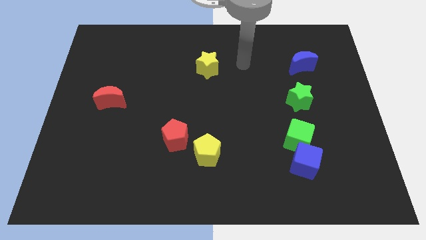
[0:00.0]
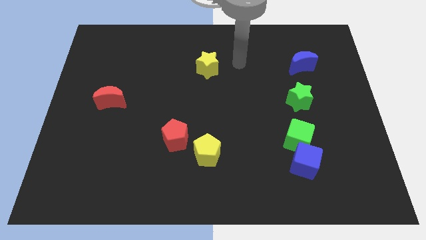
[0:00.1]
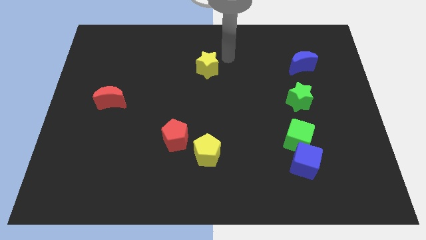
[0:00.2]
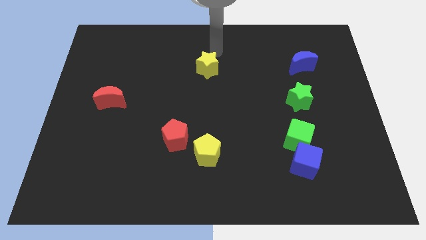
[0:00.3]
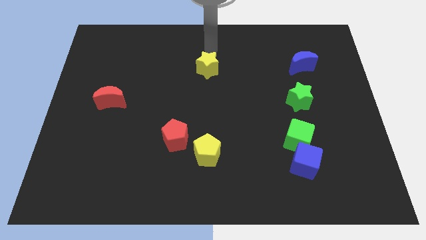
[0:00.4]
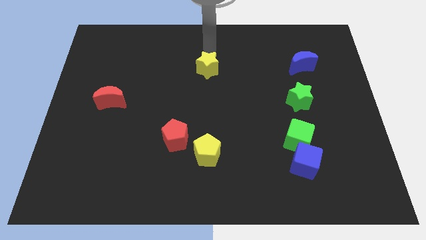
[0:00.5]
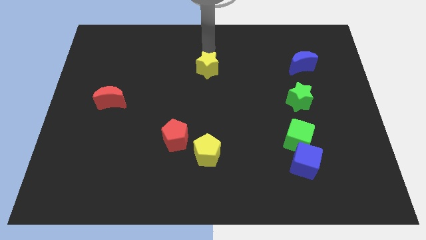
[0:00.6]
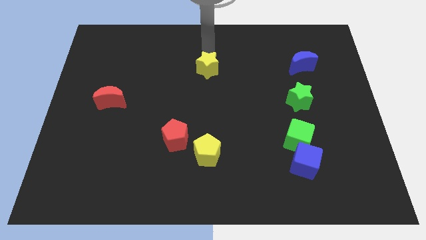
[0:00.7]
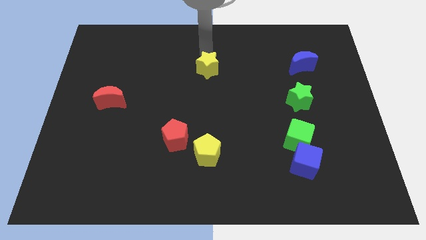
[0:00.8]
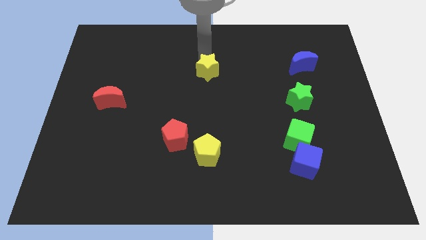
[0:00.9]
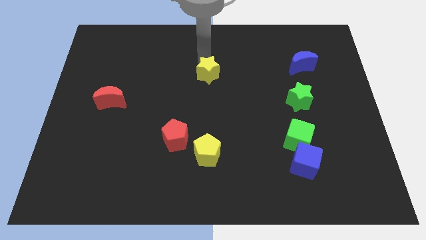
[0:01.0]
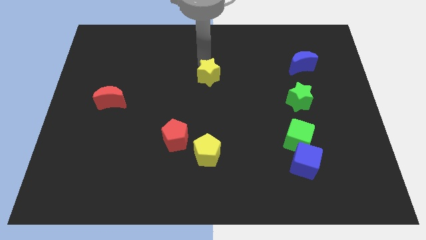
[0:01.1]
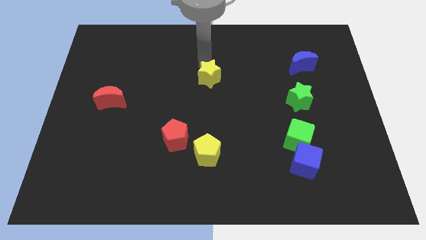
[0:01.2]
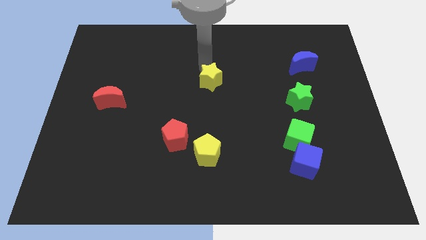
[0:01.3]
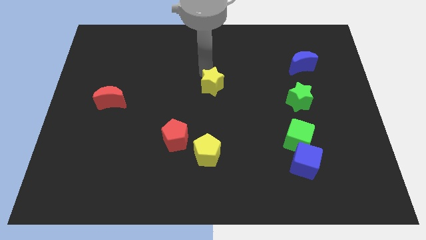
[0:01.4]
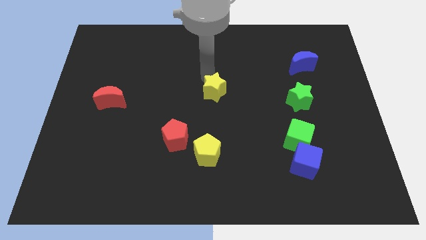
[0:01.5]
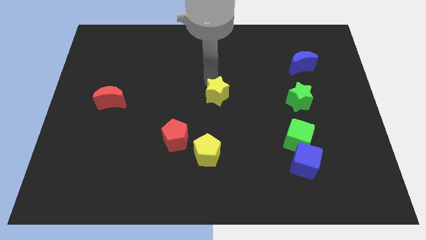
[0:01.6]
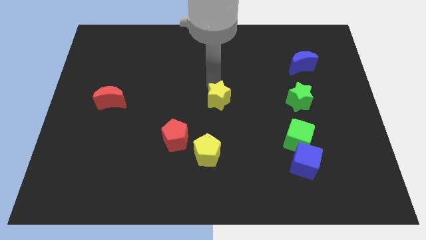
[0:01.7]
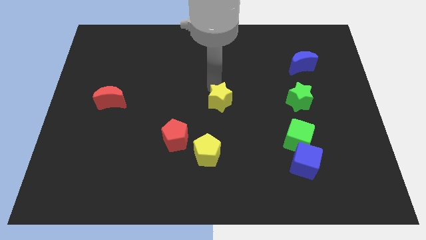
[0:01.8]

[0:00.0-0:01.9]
move the yellow star towards the yellow pentagon

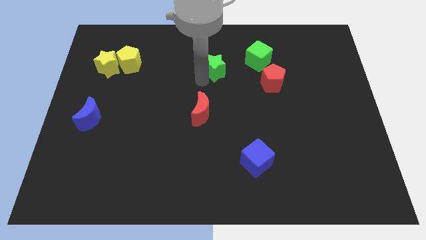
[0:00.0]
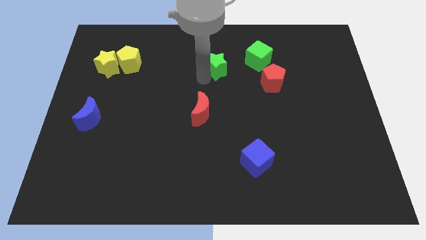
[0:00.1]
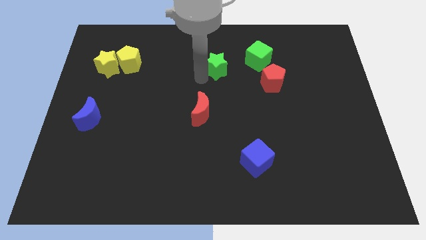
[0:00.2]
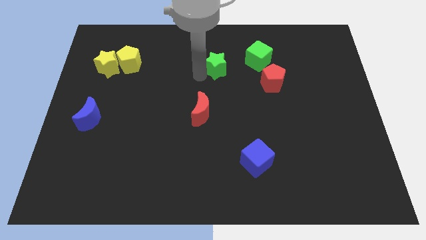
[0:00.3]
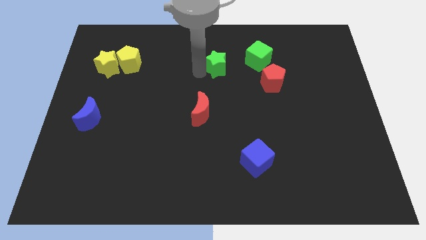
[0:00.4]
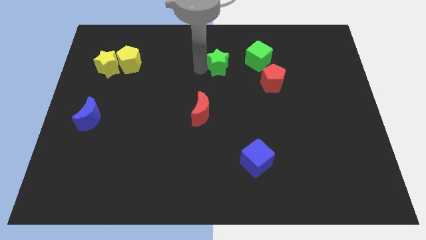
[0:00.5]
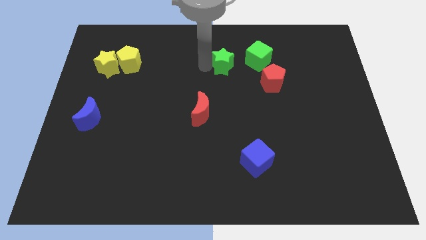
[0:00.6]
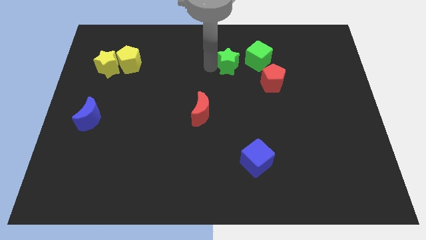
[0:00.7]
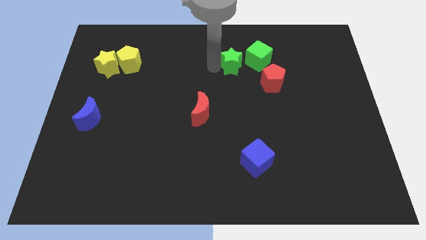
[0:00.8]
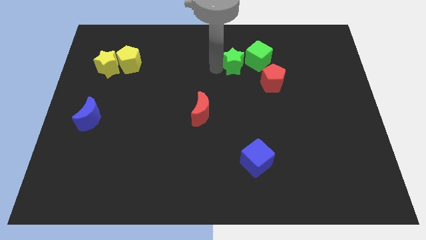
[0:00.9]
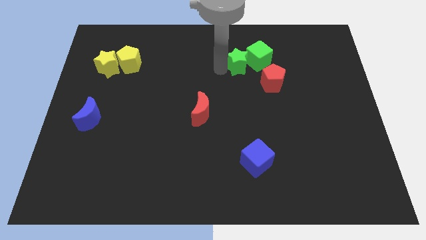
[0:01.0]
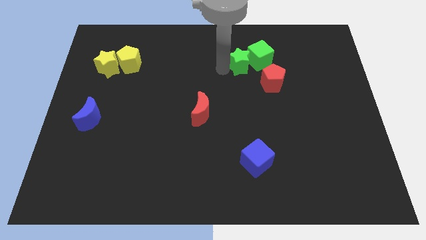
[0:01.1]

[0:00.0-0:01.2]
push green star into the green cube

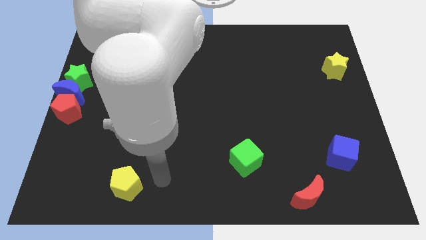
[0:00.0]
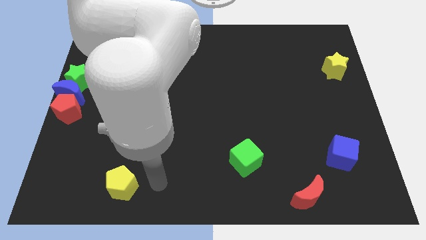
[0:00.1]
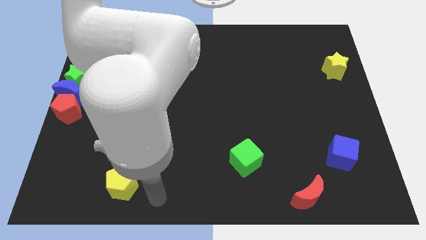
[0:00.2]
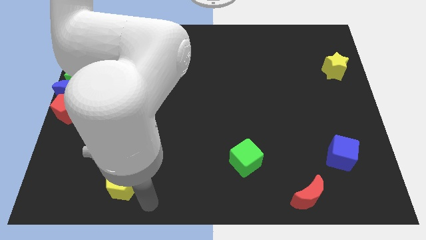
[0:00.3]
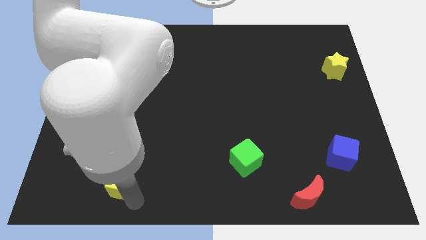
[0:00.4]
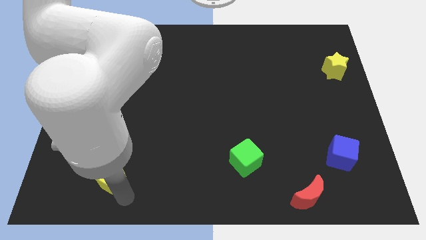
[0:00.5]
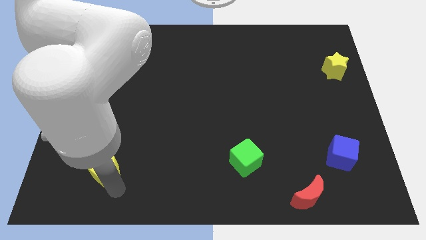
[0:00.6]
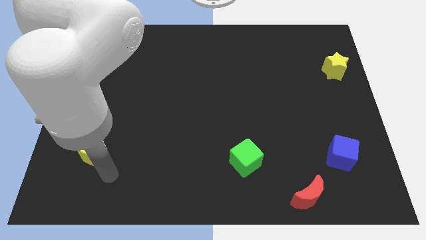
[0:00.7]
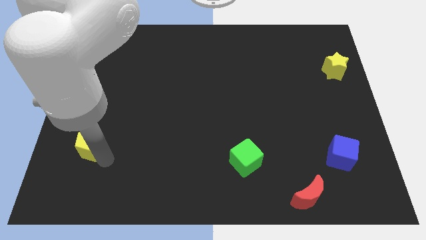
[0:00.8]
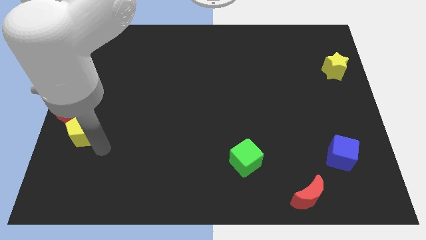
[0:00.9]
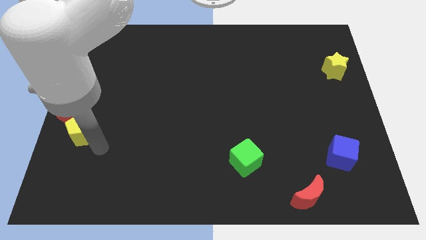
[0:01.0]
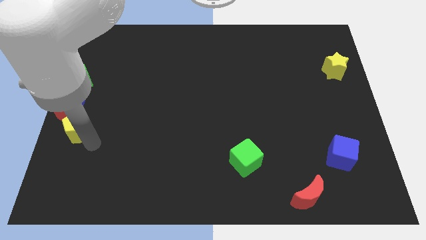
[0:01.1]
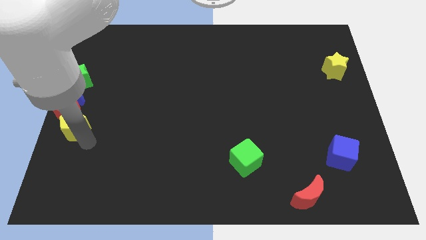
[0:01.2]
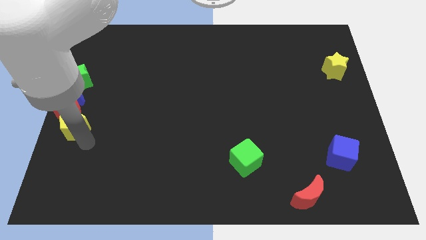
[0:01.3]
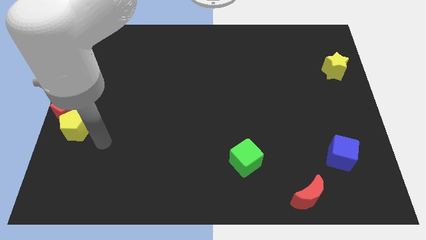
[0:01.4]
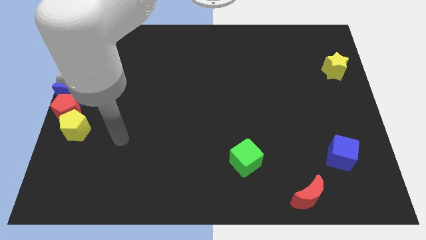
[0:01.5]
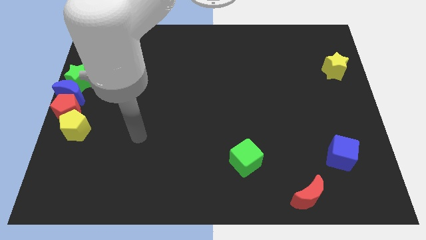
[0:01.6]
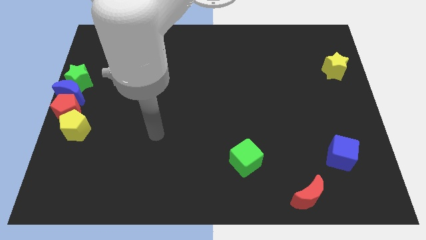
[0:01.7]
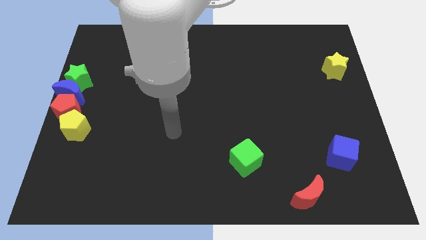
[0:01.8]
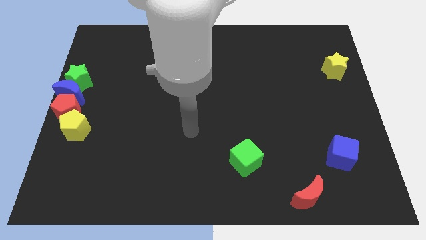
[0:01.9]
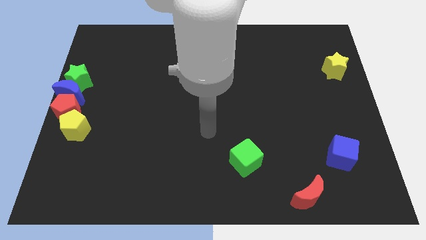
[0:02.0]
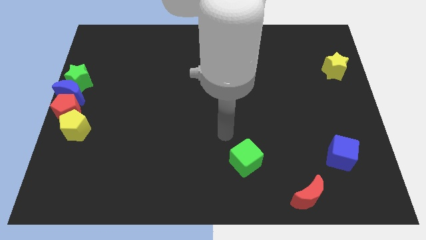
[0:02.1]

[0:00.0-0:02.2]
push the yellow pentagon to the bottom right of red pentagon

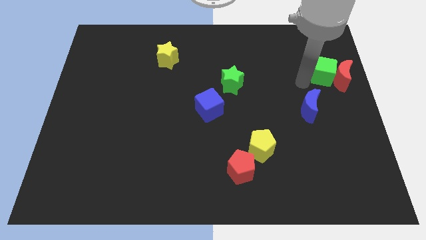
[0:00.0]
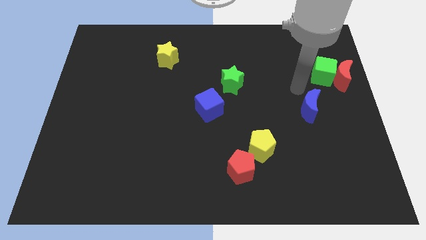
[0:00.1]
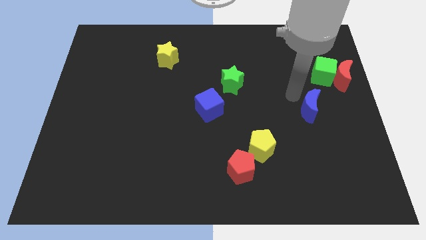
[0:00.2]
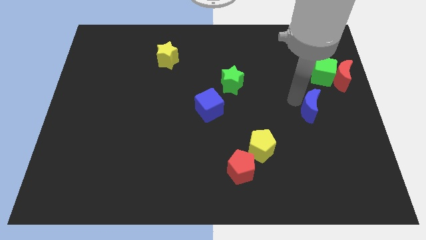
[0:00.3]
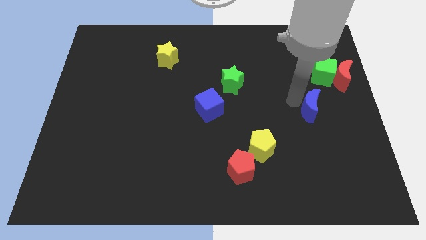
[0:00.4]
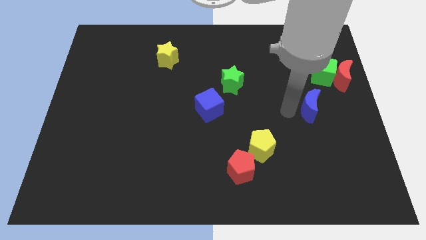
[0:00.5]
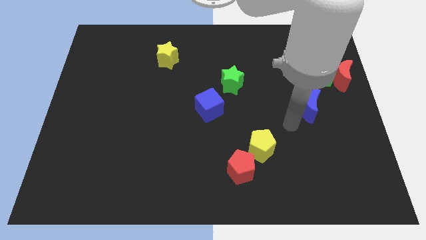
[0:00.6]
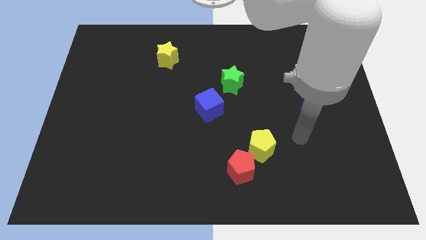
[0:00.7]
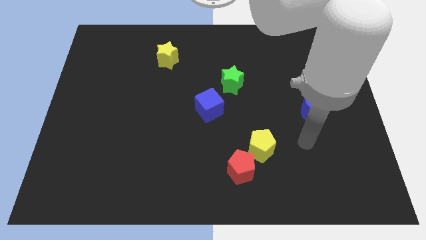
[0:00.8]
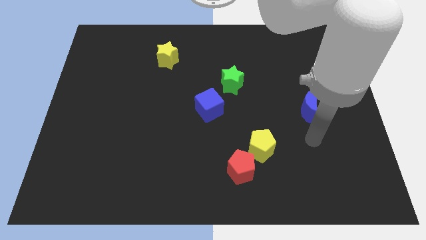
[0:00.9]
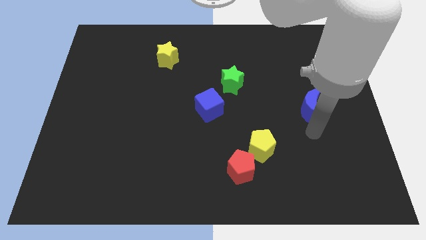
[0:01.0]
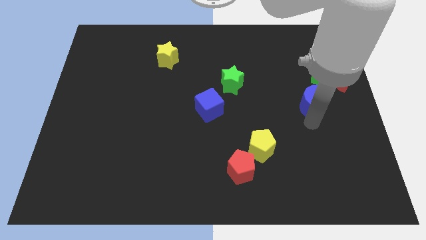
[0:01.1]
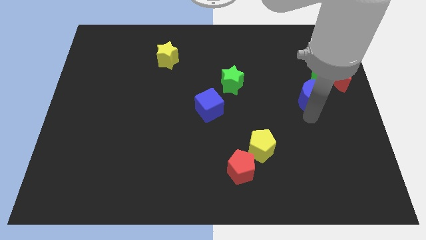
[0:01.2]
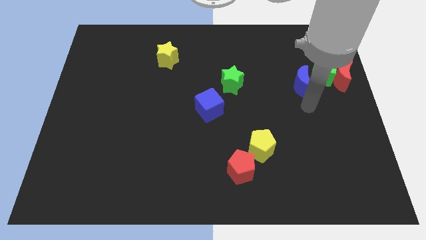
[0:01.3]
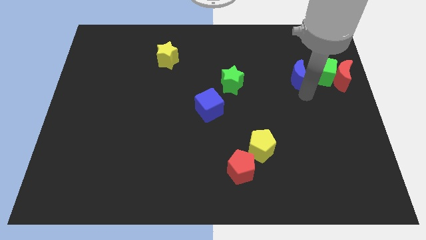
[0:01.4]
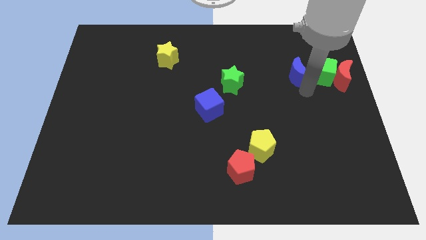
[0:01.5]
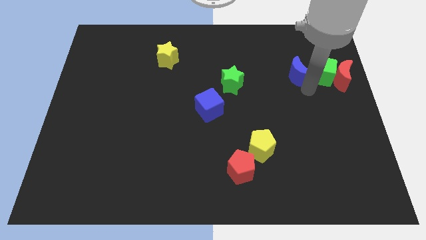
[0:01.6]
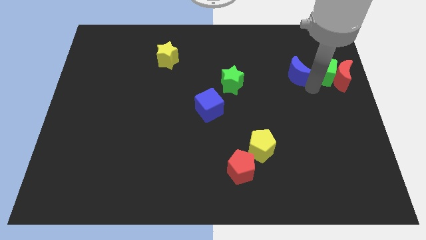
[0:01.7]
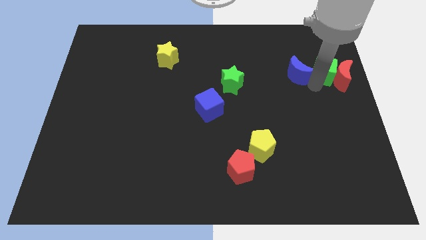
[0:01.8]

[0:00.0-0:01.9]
place the blue moon parallel left to the green cube

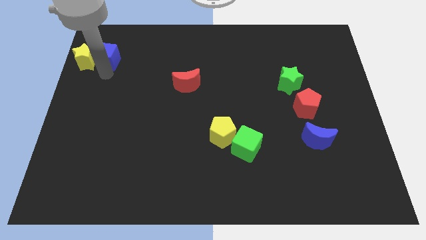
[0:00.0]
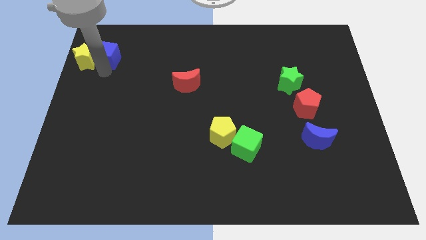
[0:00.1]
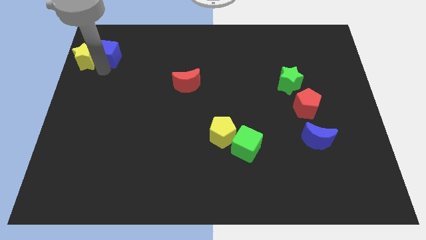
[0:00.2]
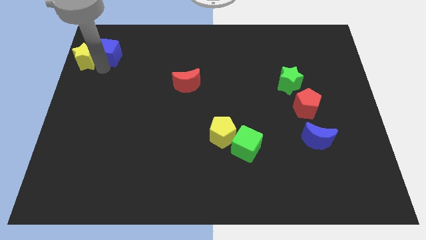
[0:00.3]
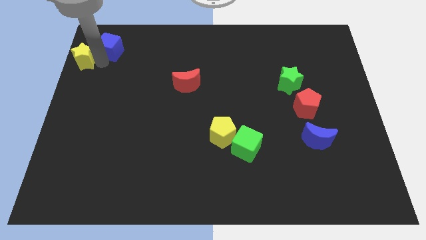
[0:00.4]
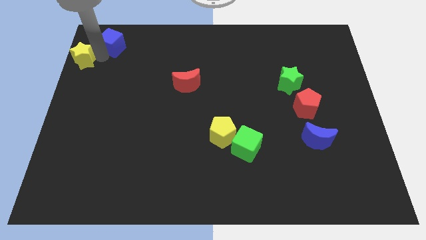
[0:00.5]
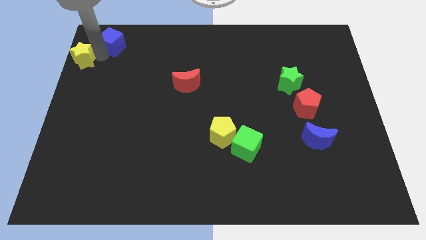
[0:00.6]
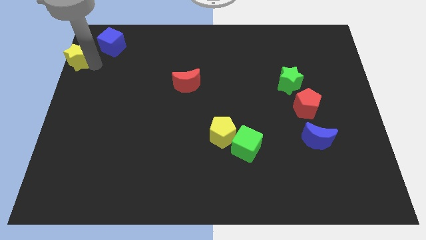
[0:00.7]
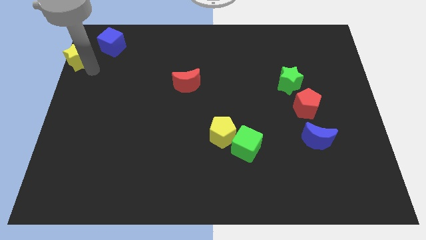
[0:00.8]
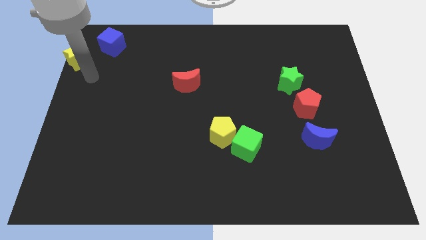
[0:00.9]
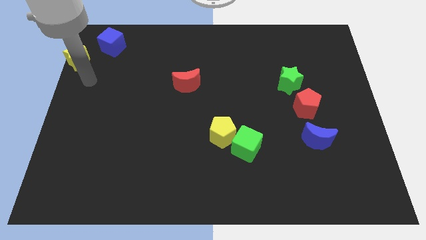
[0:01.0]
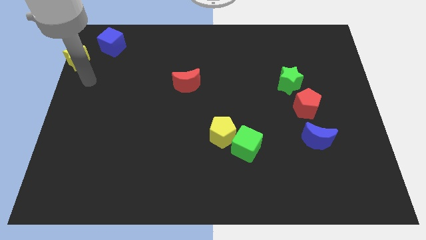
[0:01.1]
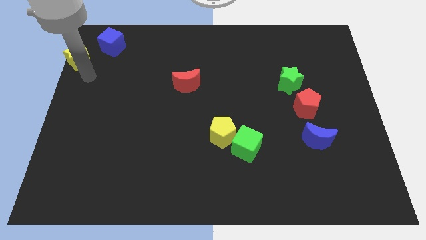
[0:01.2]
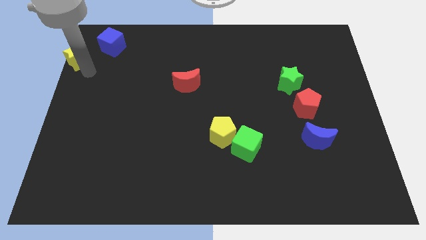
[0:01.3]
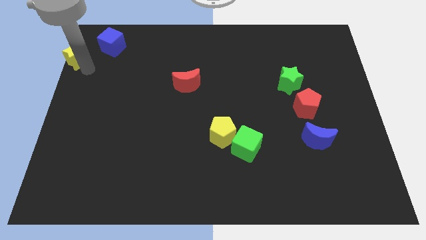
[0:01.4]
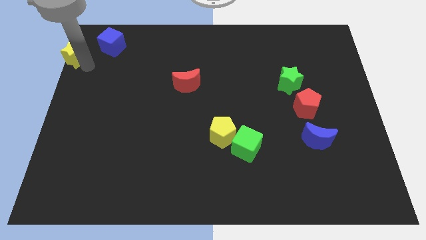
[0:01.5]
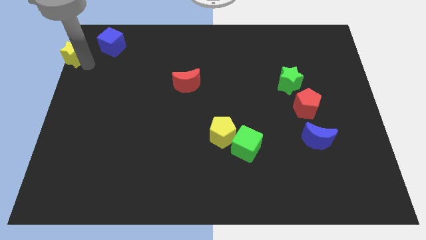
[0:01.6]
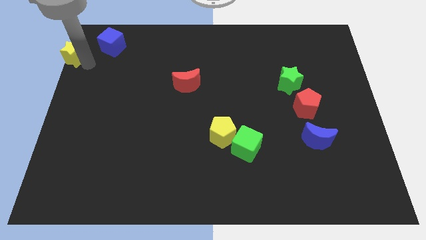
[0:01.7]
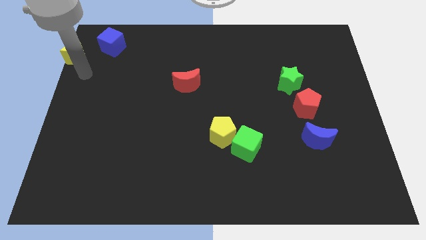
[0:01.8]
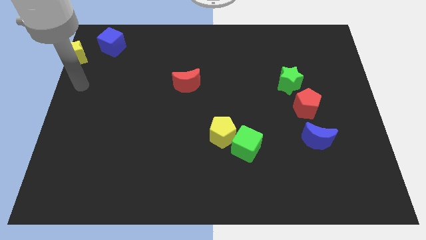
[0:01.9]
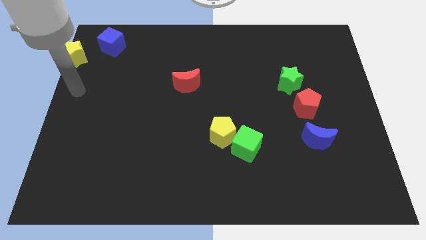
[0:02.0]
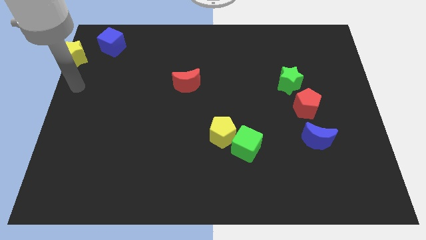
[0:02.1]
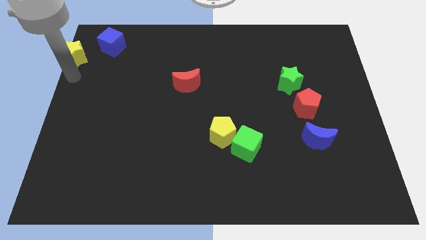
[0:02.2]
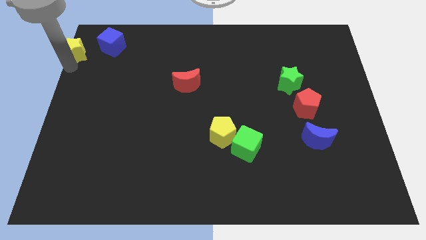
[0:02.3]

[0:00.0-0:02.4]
separate the yellow star and the blue cube
